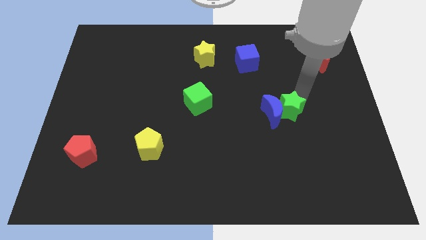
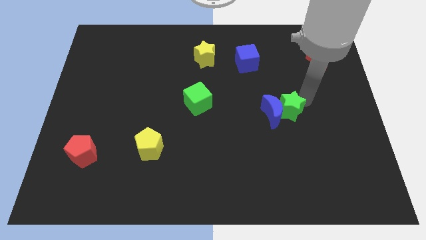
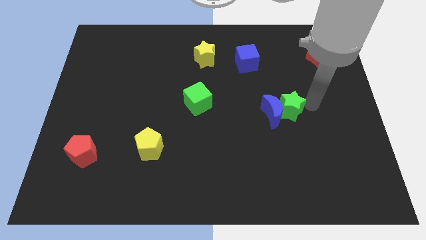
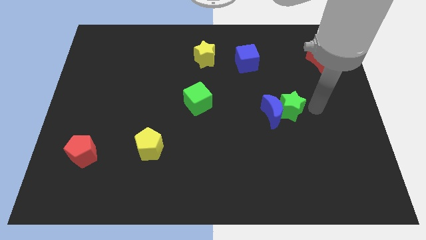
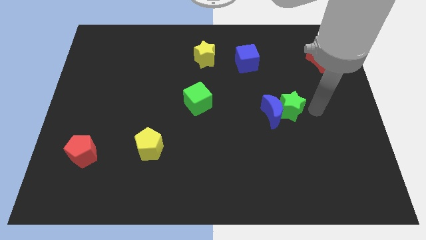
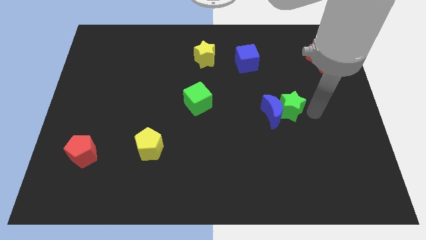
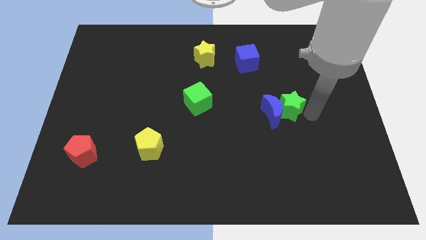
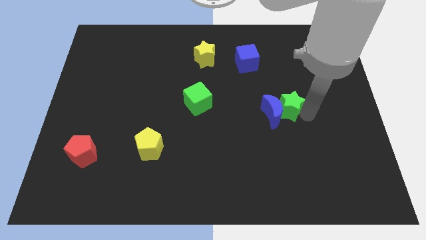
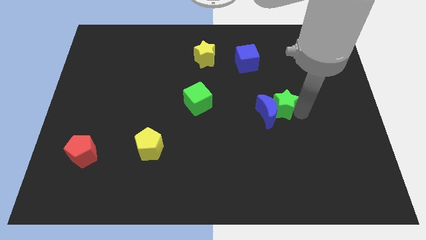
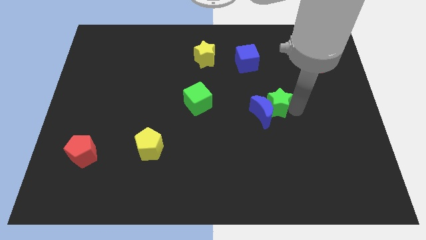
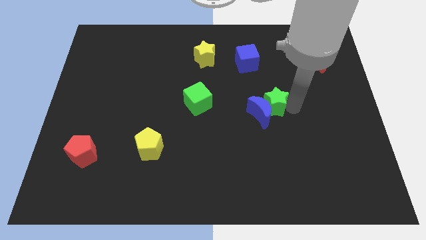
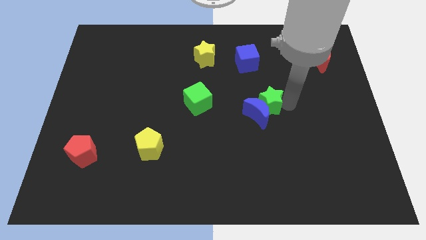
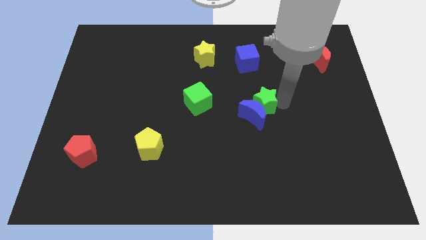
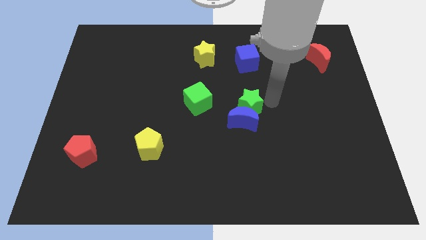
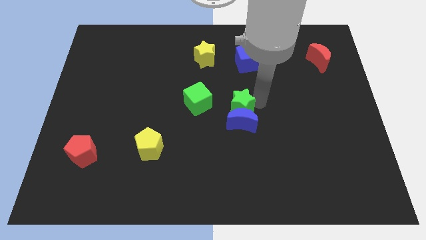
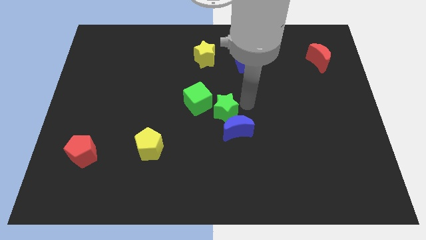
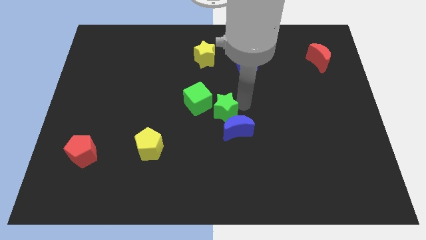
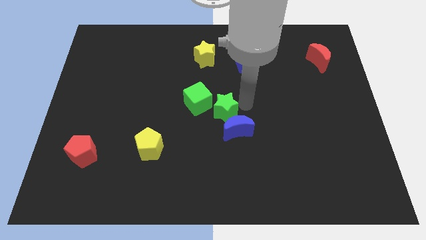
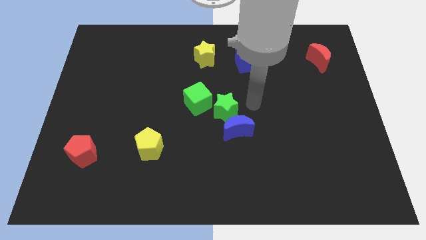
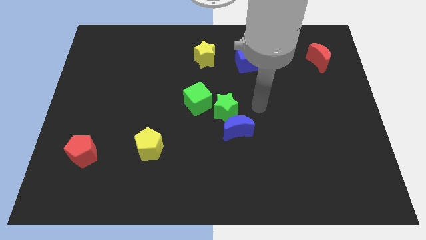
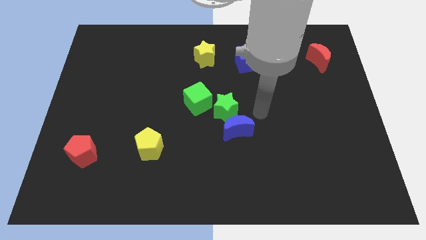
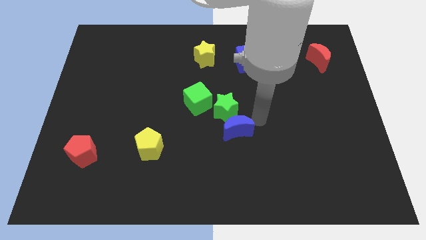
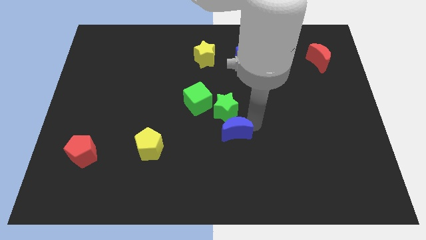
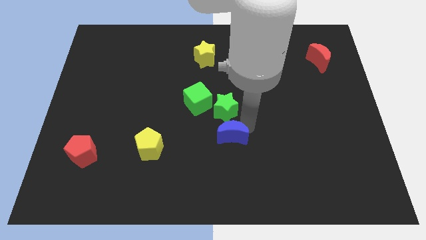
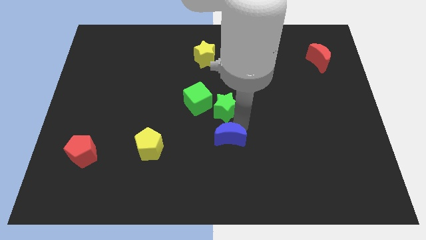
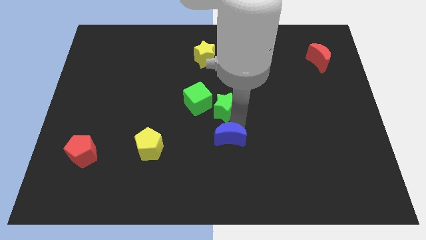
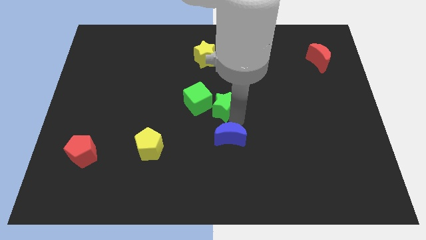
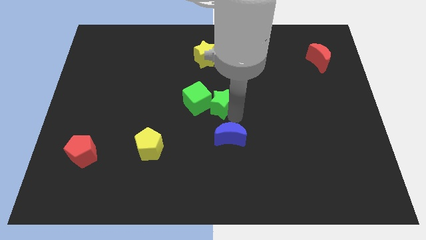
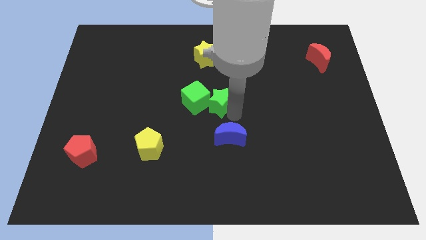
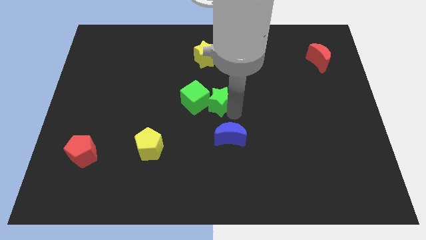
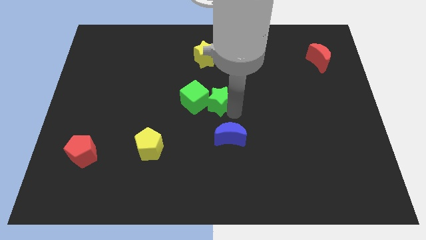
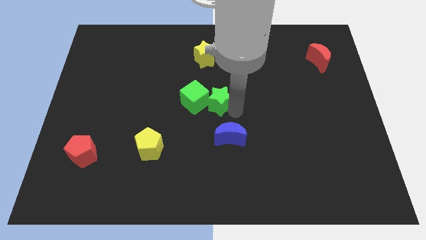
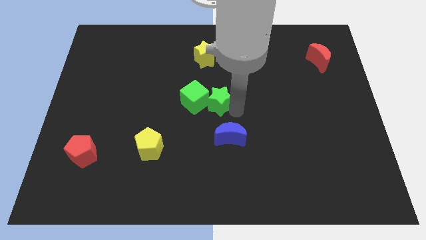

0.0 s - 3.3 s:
place green star beside green cube

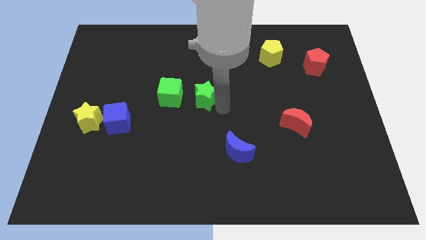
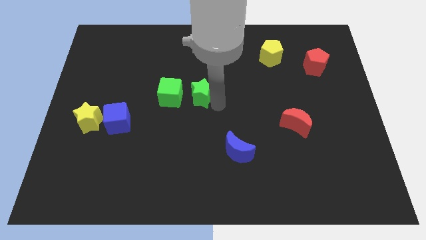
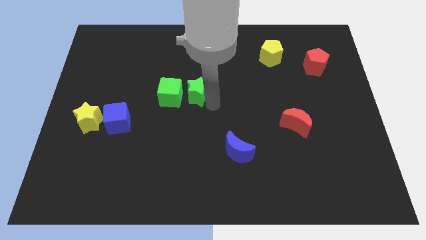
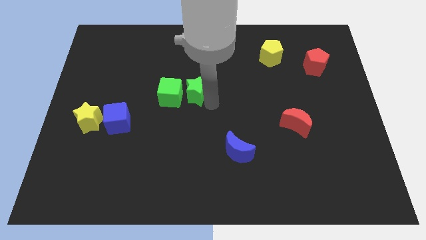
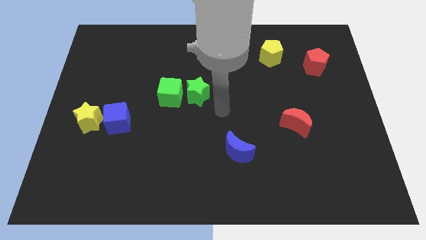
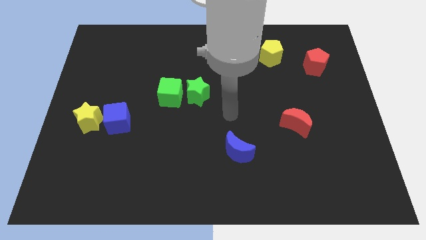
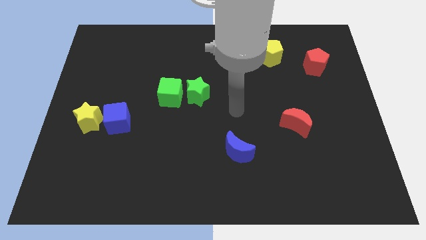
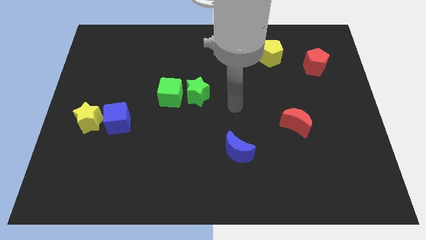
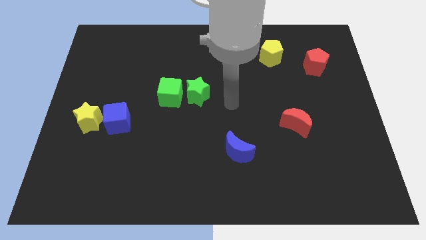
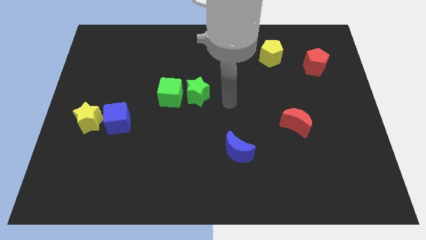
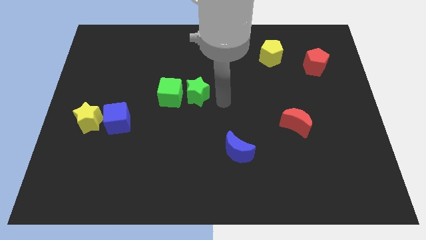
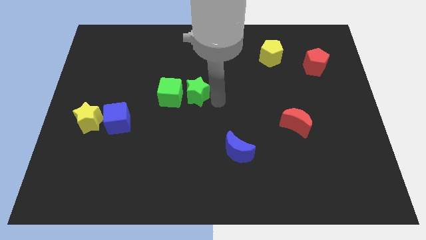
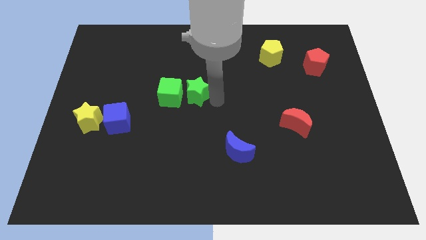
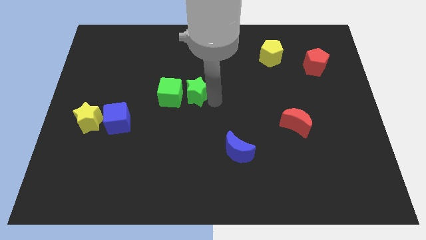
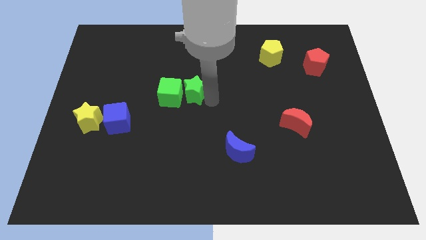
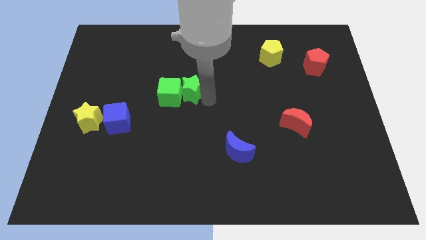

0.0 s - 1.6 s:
push the green star into green cube

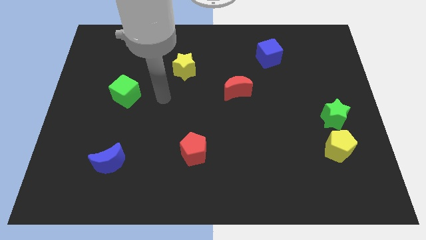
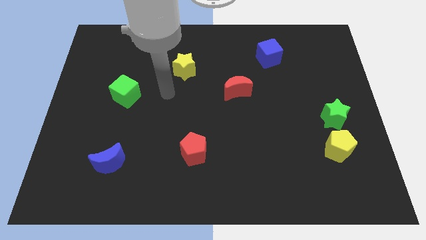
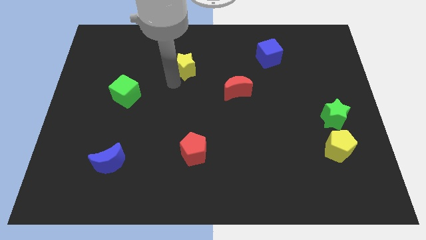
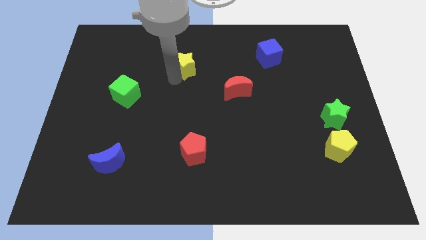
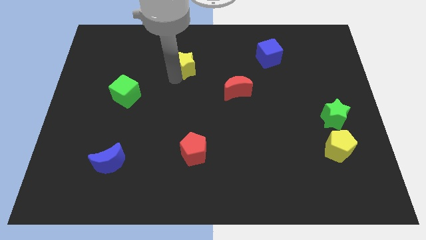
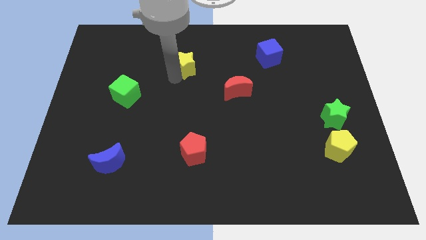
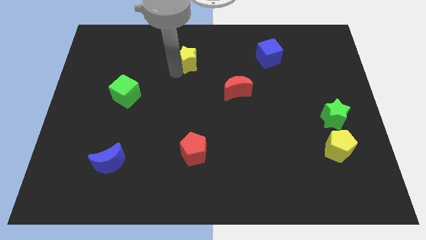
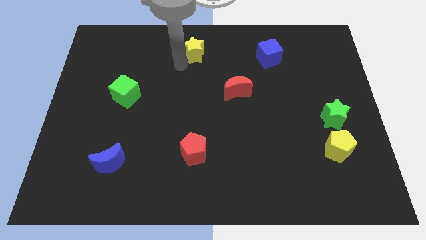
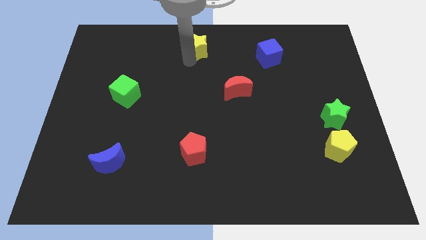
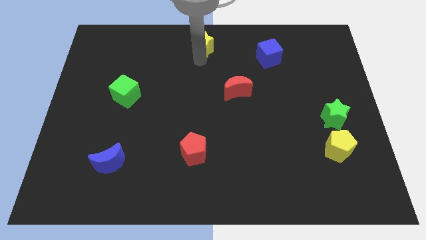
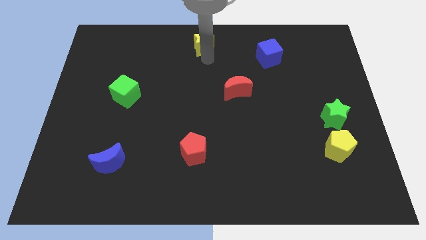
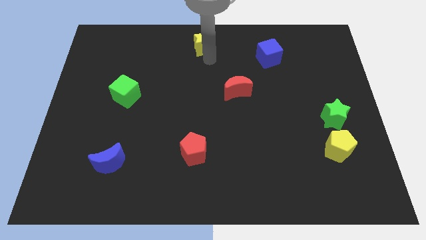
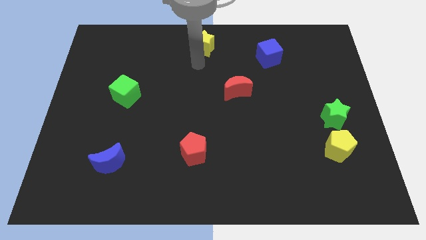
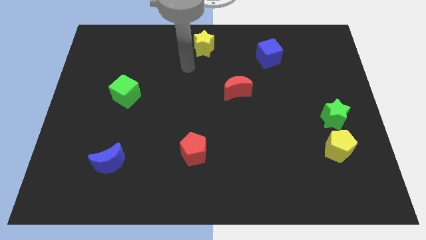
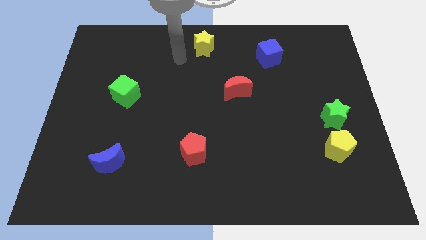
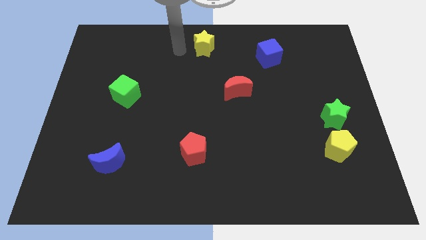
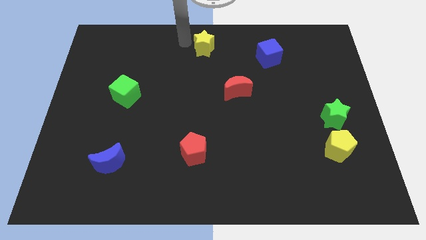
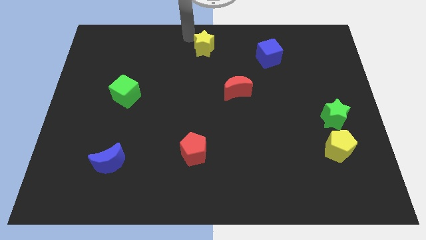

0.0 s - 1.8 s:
move the yellow star at the top center of the board

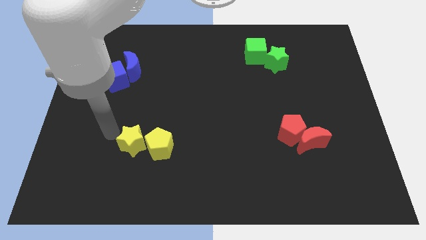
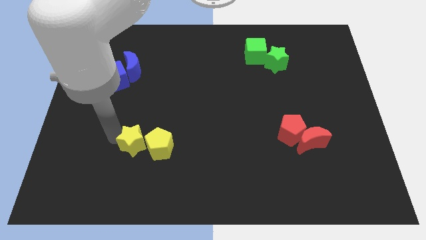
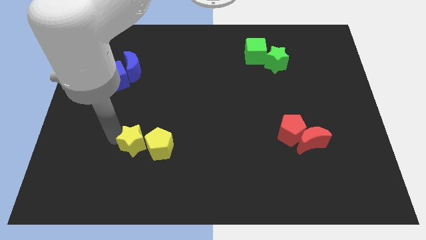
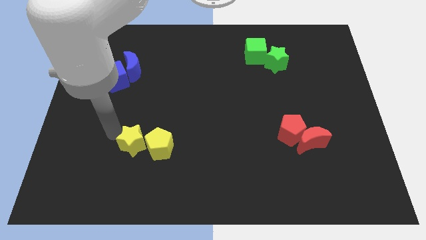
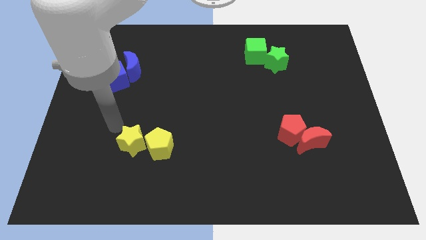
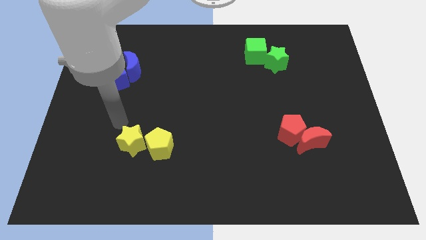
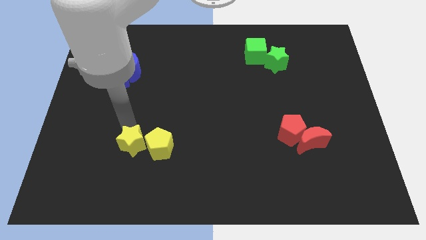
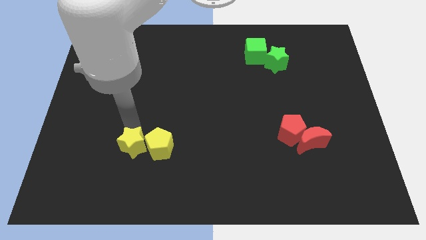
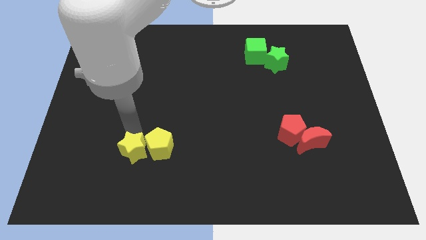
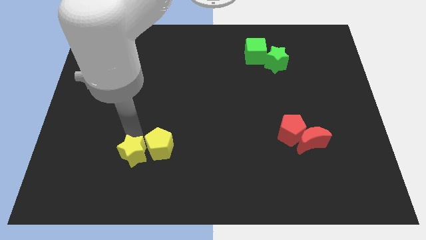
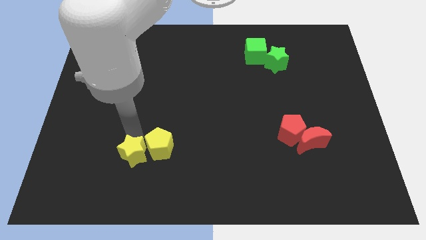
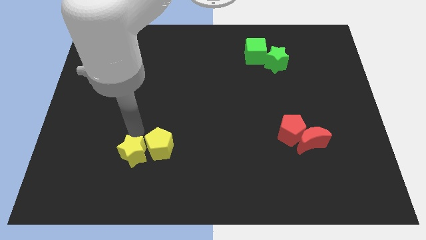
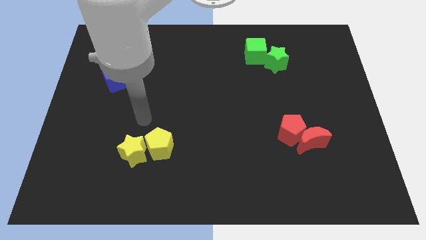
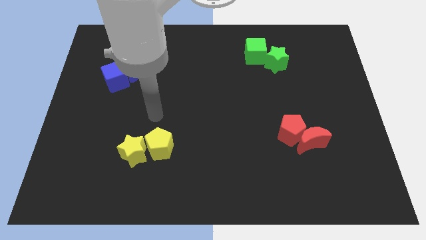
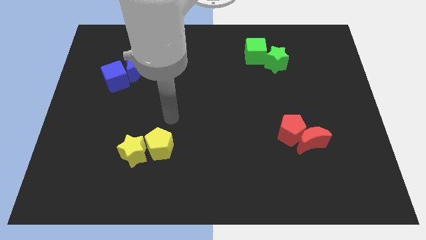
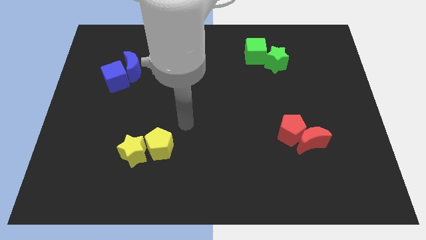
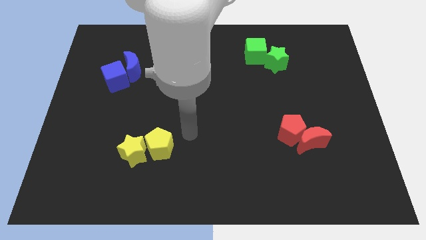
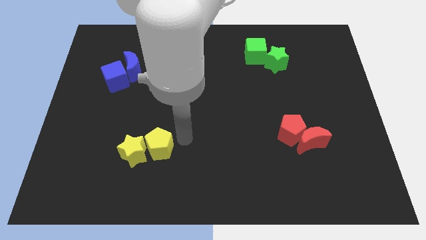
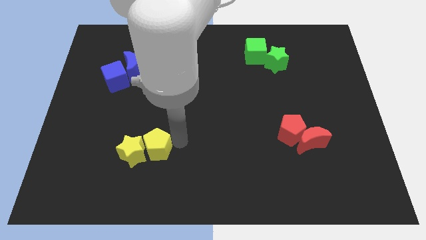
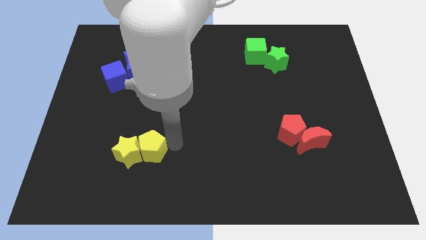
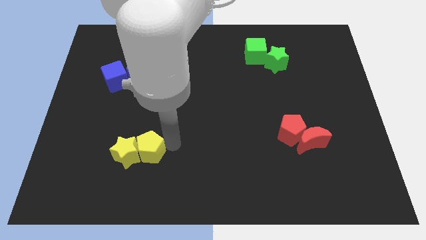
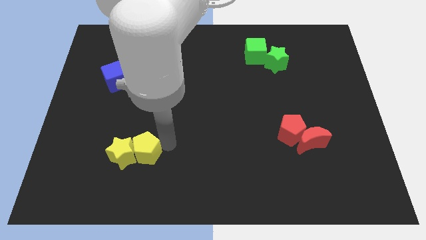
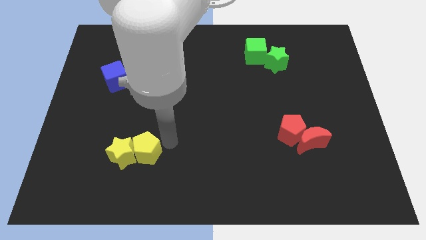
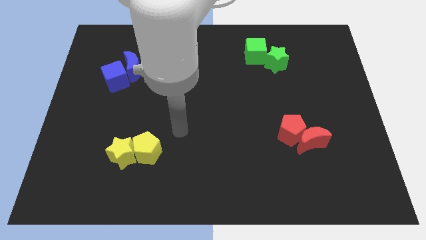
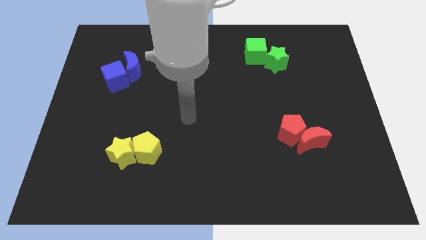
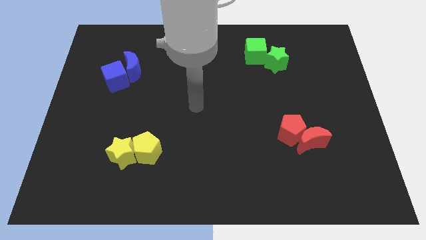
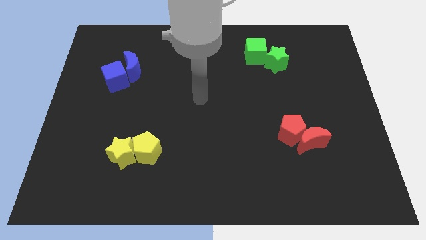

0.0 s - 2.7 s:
make a pair of yellow blocks and push towards left side
